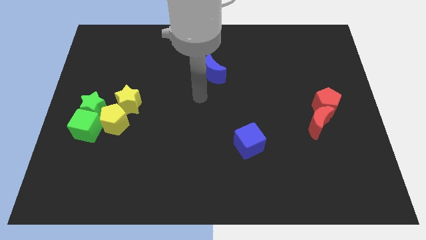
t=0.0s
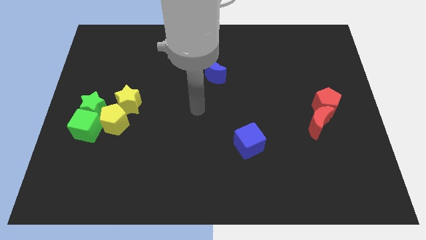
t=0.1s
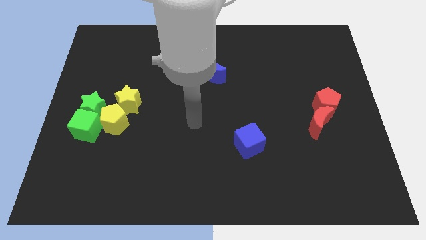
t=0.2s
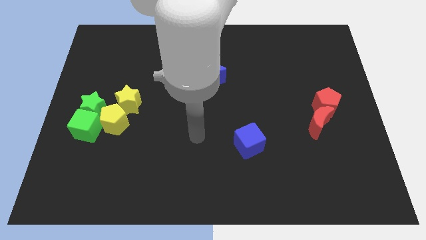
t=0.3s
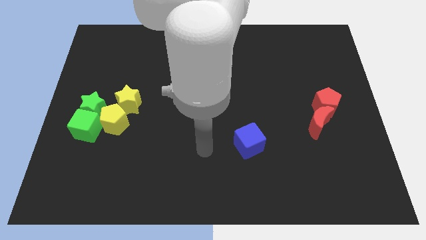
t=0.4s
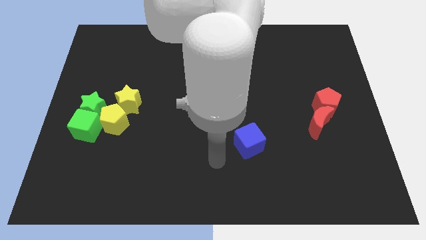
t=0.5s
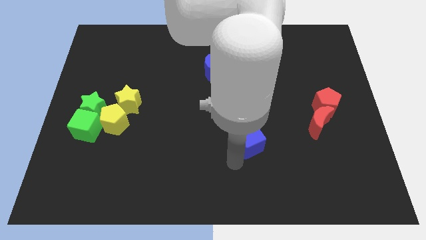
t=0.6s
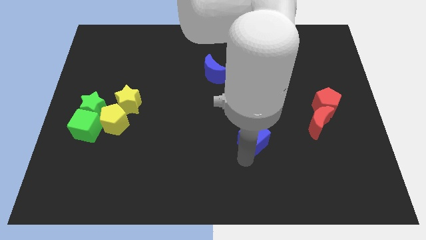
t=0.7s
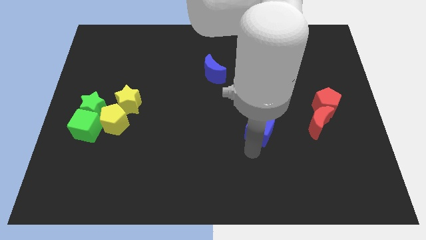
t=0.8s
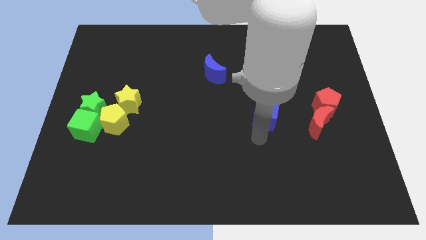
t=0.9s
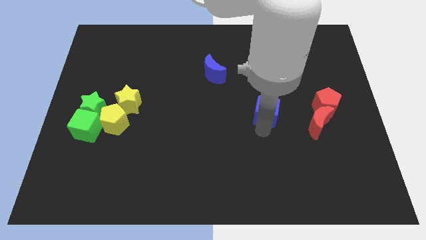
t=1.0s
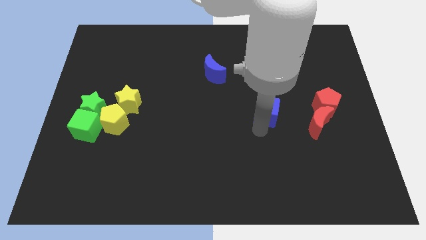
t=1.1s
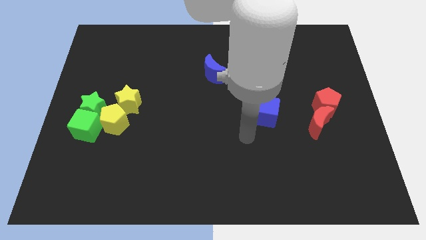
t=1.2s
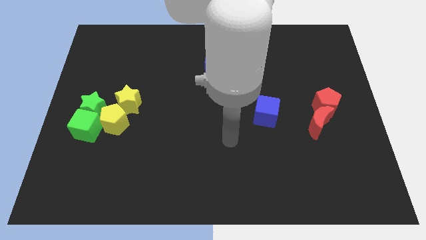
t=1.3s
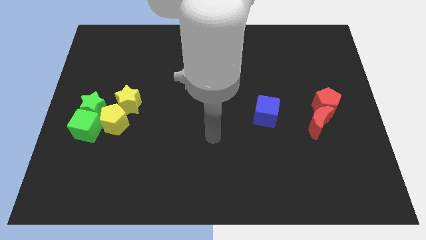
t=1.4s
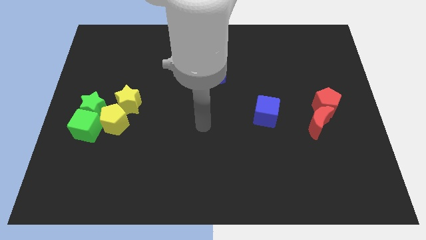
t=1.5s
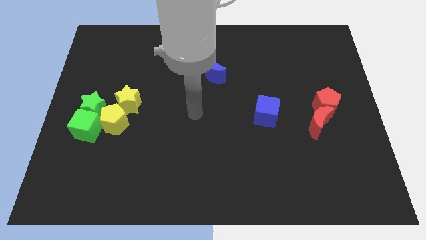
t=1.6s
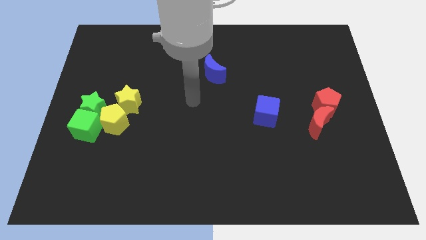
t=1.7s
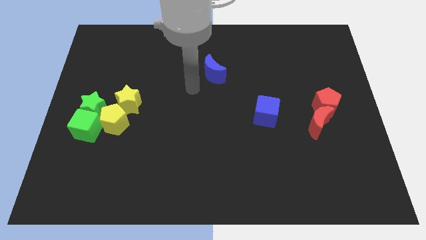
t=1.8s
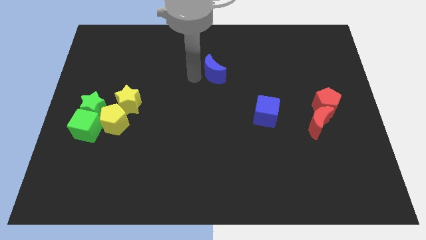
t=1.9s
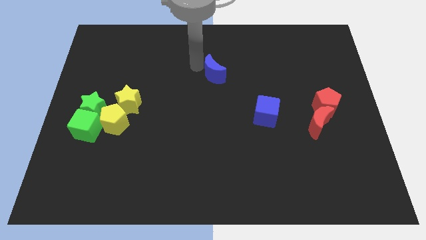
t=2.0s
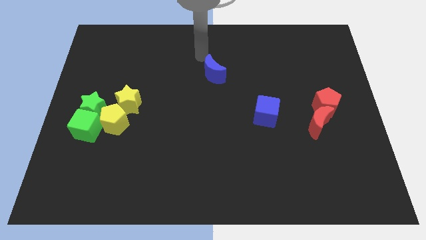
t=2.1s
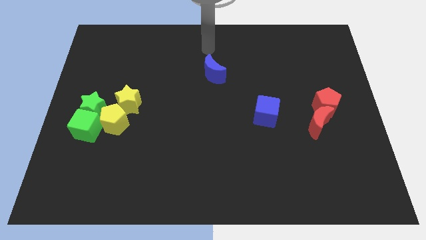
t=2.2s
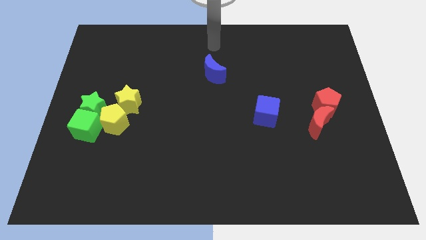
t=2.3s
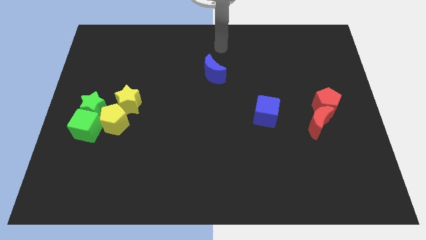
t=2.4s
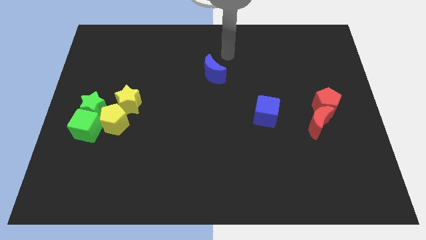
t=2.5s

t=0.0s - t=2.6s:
place the blue cube parallel to the group of yellow blocks

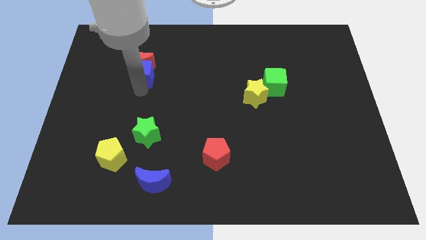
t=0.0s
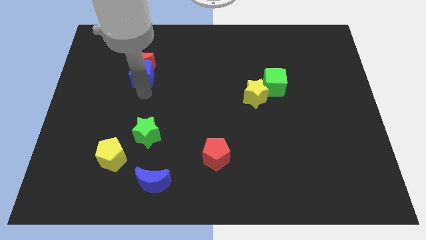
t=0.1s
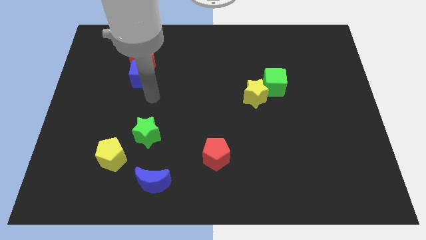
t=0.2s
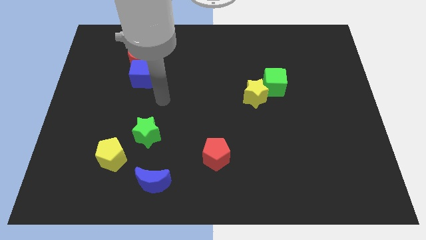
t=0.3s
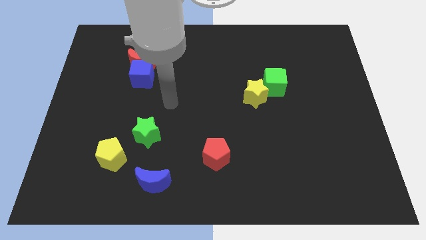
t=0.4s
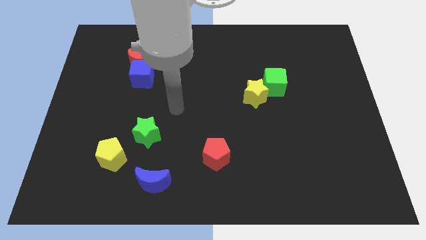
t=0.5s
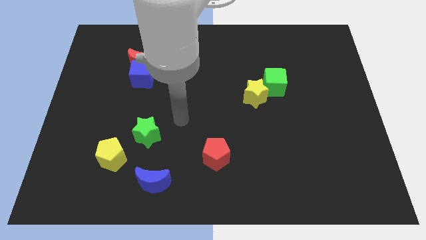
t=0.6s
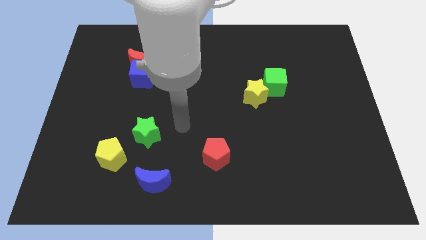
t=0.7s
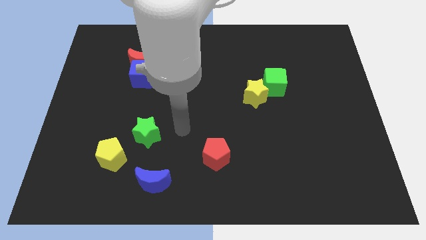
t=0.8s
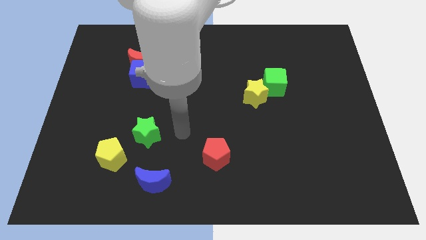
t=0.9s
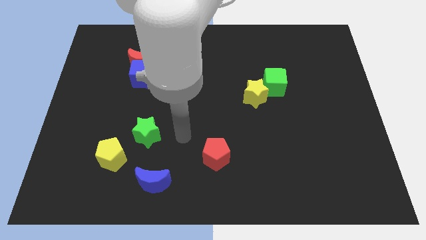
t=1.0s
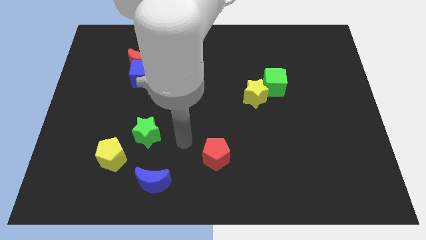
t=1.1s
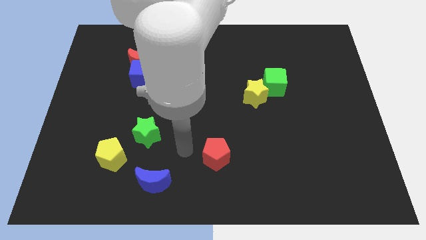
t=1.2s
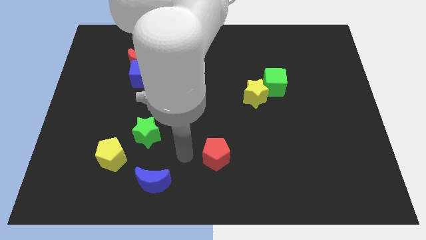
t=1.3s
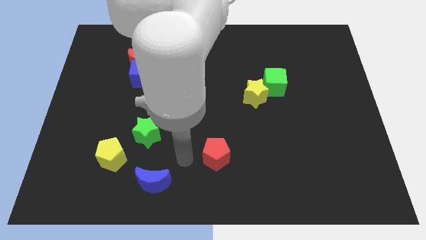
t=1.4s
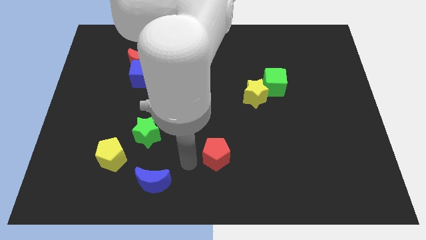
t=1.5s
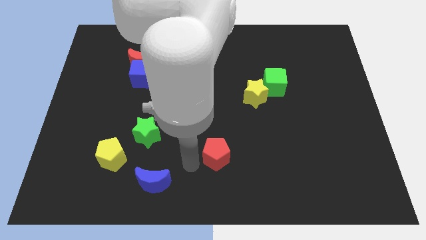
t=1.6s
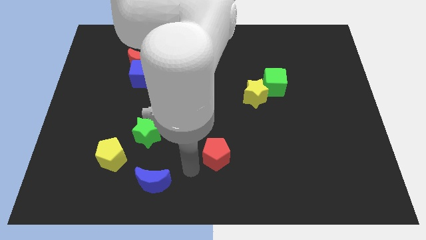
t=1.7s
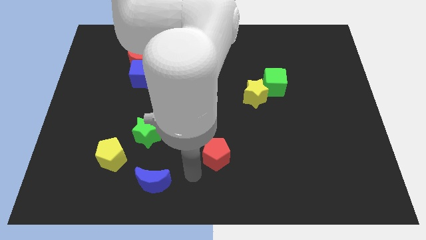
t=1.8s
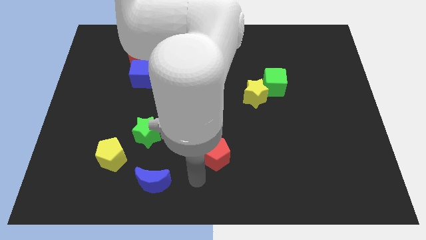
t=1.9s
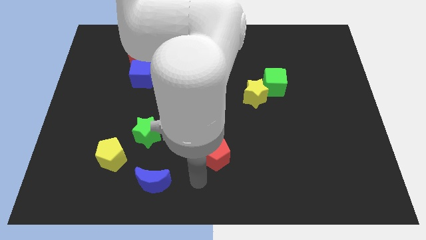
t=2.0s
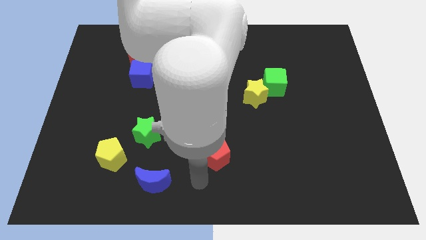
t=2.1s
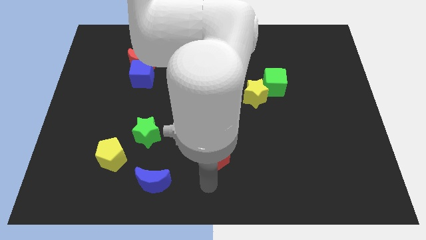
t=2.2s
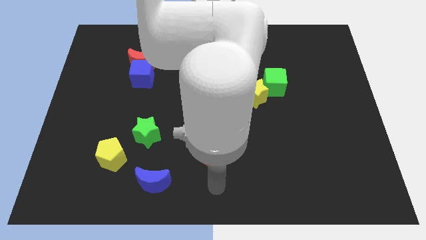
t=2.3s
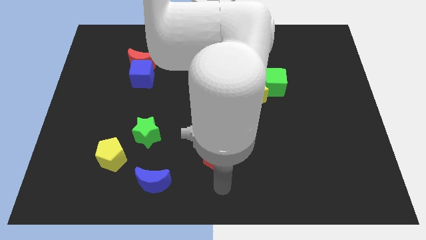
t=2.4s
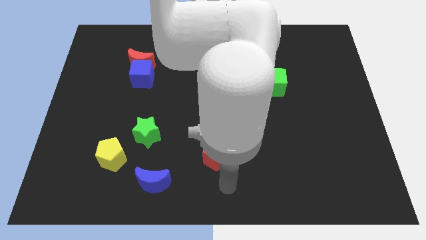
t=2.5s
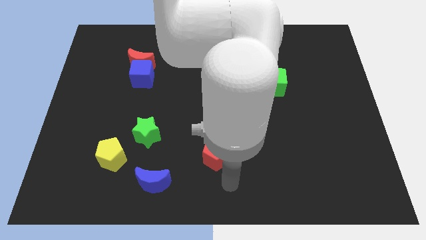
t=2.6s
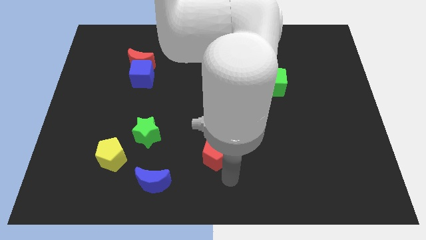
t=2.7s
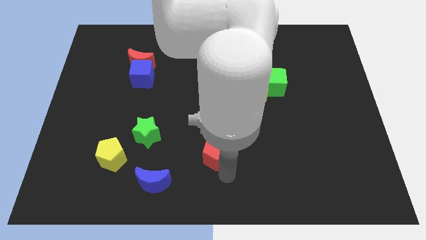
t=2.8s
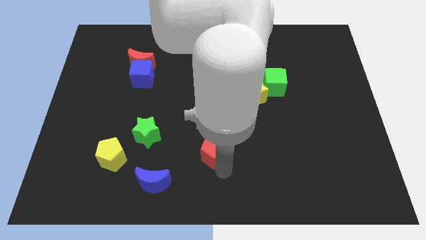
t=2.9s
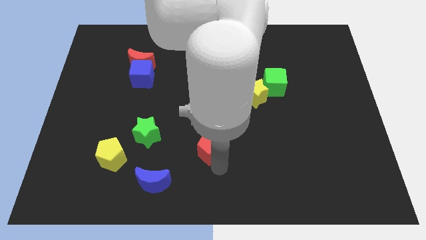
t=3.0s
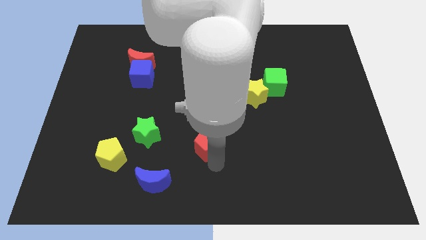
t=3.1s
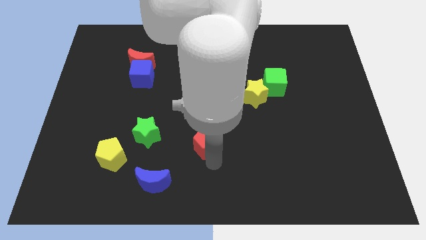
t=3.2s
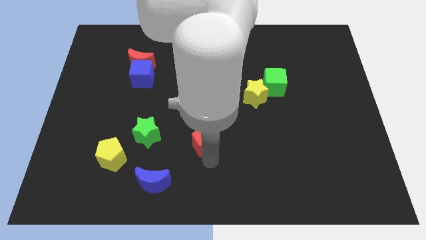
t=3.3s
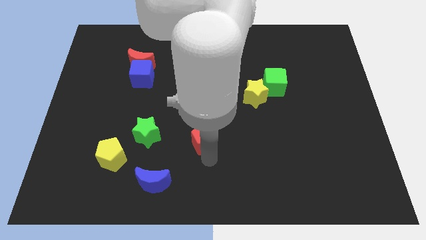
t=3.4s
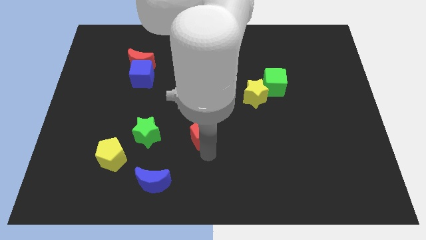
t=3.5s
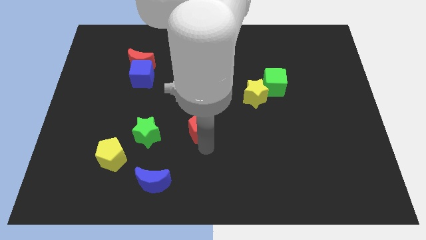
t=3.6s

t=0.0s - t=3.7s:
place the red pentagon right to the green star

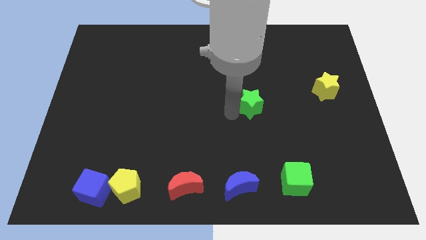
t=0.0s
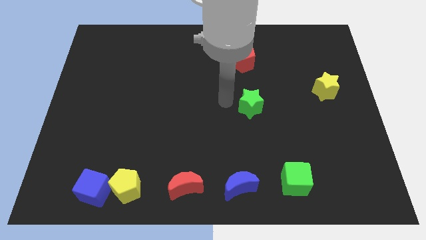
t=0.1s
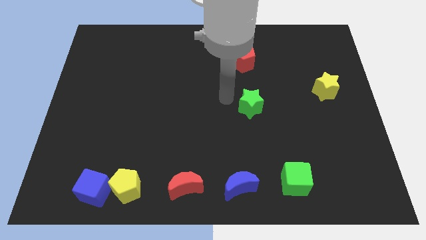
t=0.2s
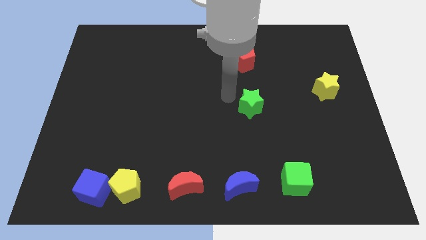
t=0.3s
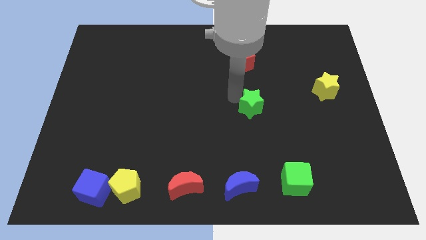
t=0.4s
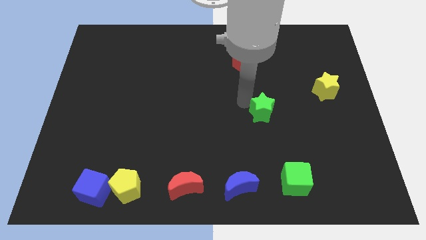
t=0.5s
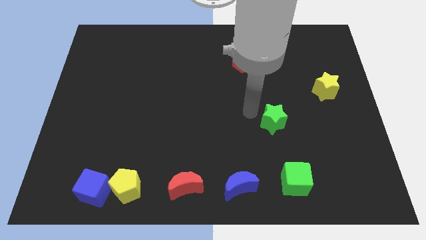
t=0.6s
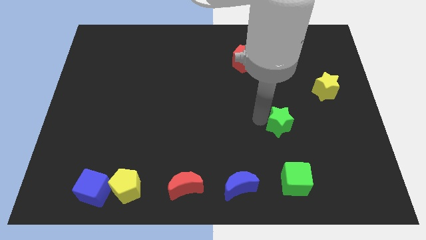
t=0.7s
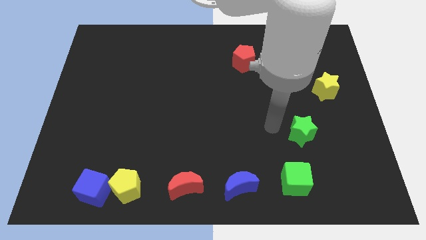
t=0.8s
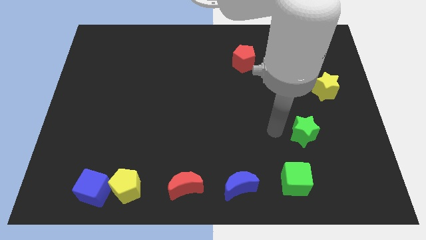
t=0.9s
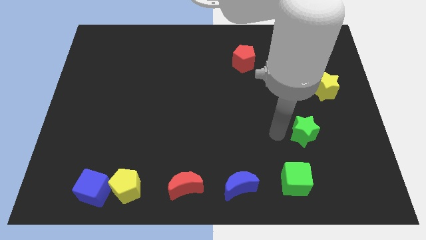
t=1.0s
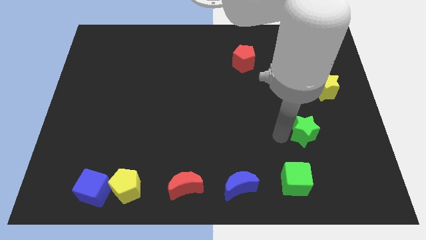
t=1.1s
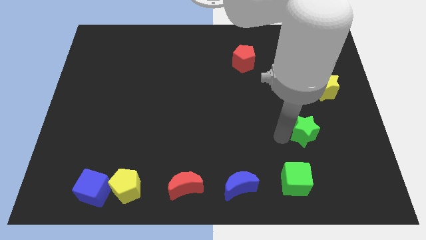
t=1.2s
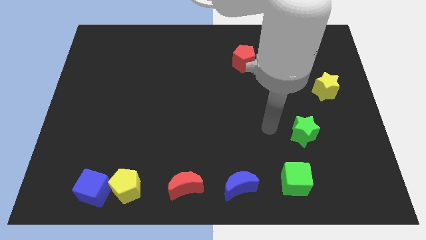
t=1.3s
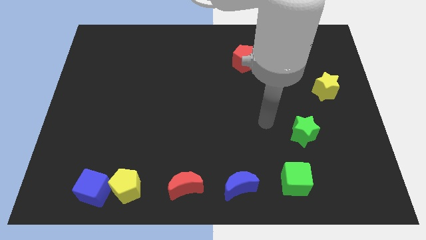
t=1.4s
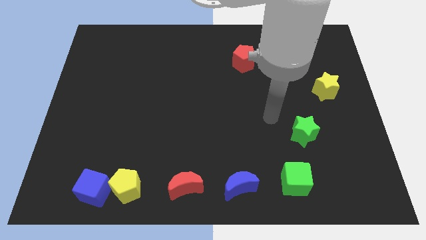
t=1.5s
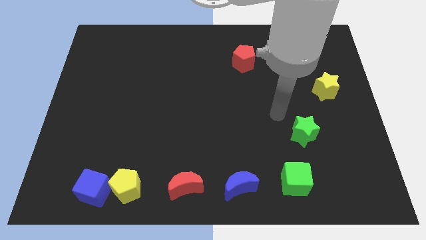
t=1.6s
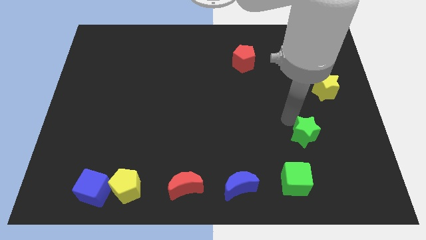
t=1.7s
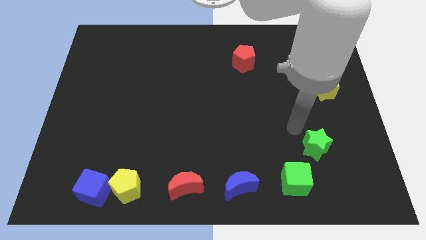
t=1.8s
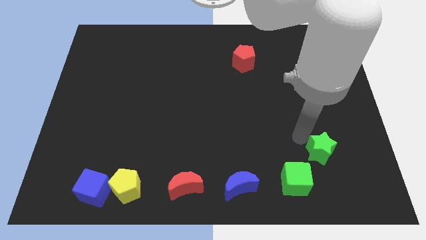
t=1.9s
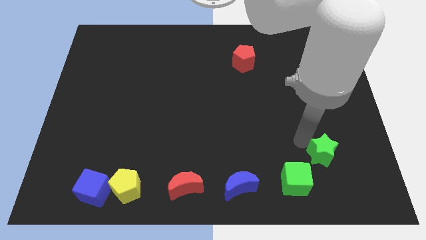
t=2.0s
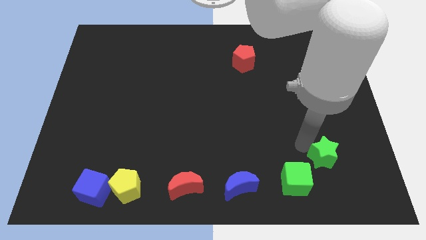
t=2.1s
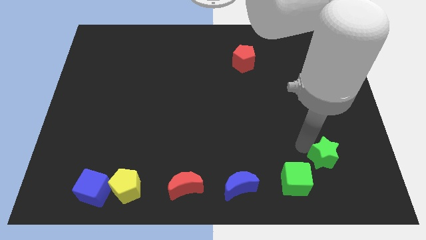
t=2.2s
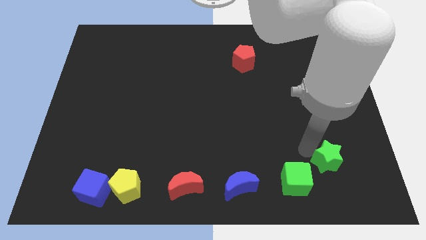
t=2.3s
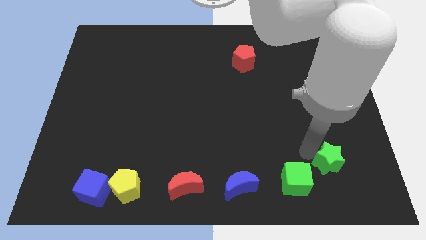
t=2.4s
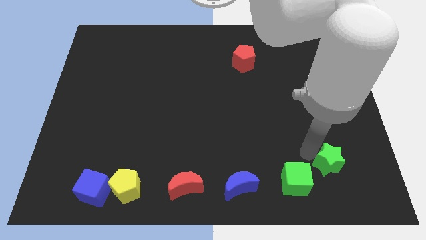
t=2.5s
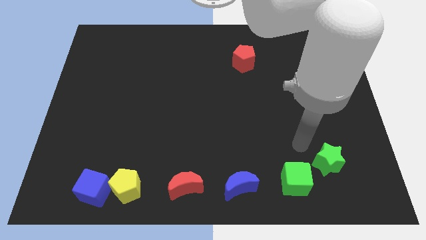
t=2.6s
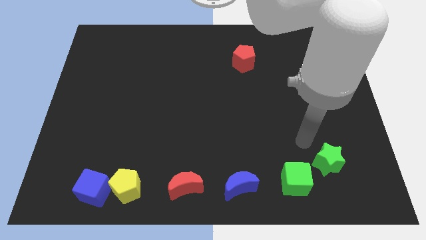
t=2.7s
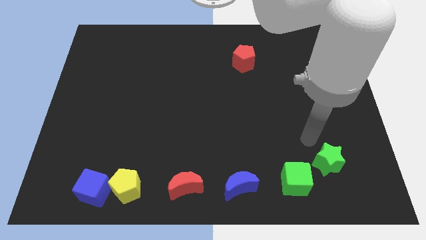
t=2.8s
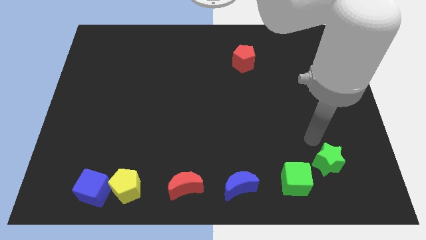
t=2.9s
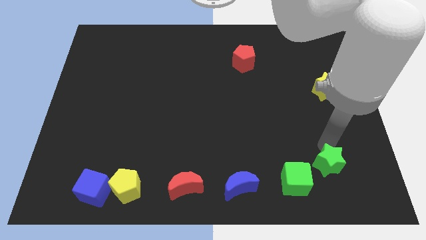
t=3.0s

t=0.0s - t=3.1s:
place green star to the top right of green cube
